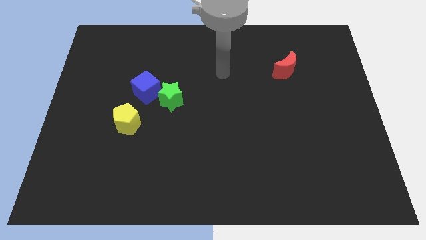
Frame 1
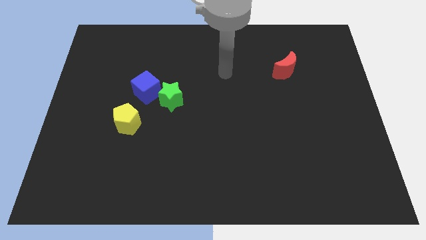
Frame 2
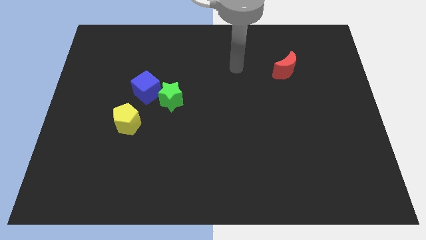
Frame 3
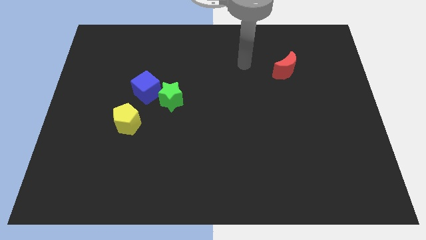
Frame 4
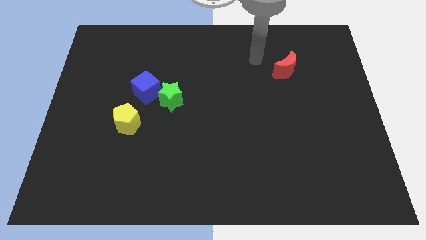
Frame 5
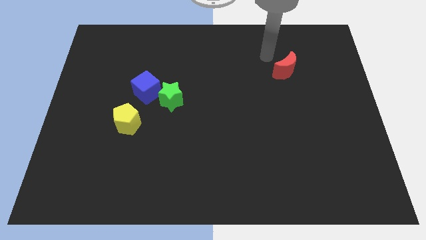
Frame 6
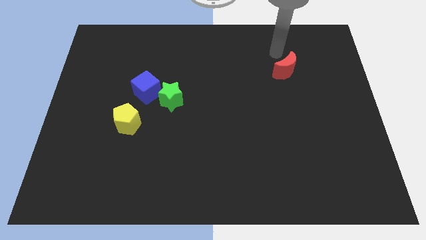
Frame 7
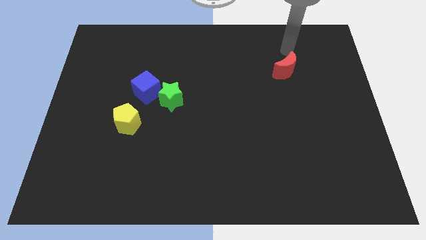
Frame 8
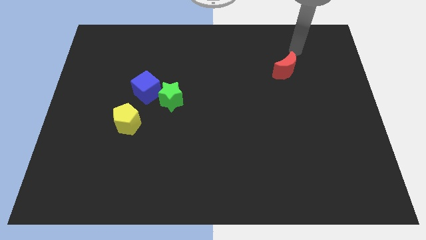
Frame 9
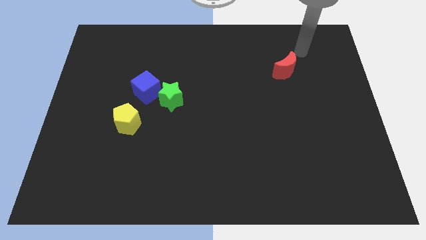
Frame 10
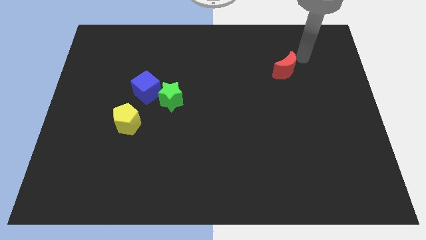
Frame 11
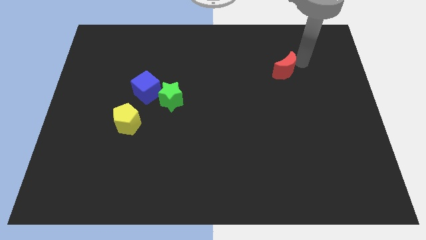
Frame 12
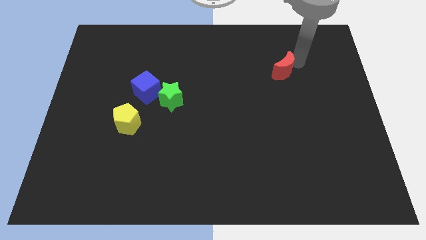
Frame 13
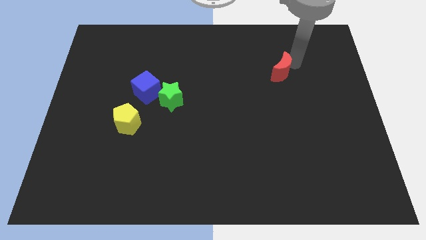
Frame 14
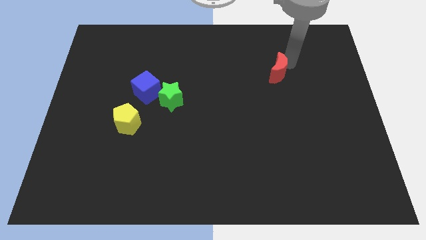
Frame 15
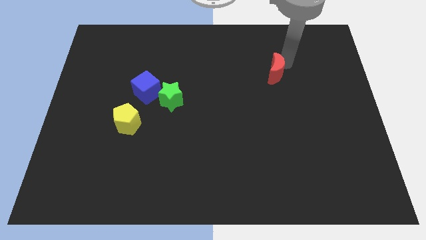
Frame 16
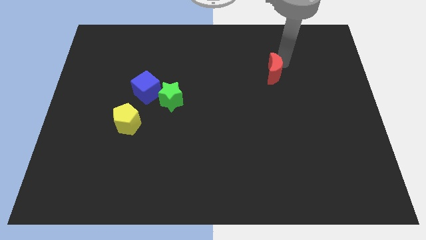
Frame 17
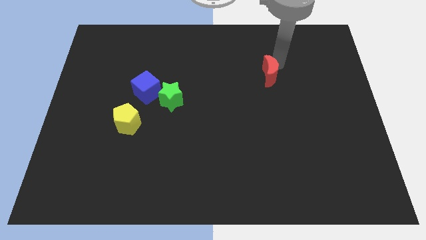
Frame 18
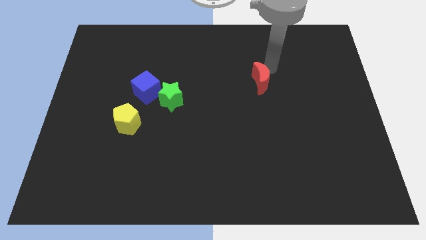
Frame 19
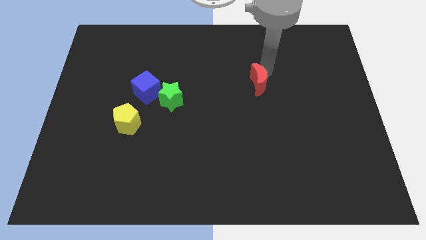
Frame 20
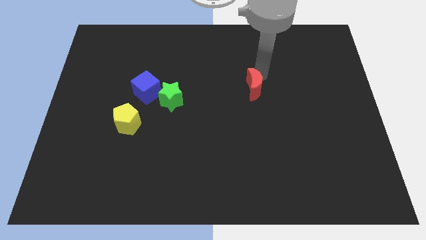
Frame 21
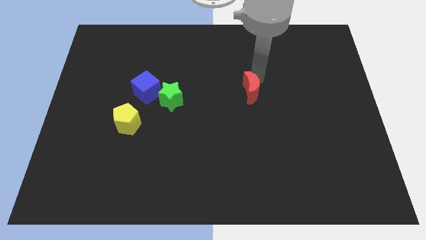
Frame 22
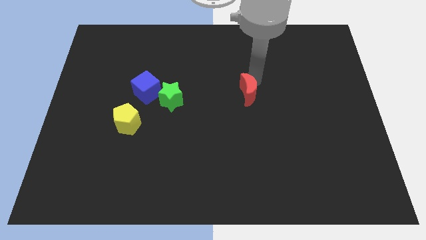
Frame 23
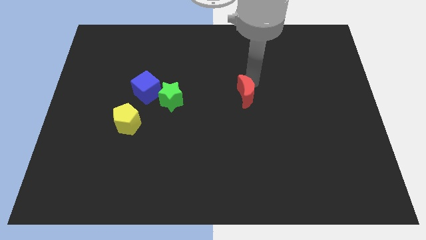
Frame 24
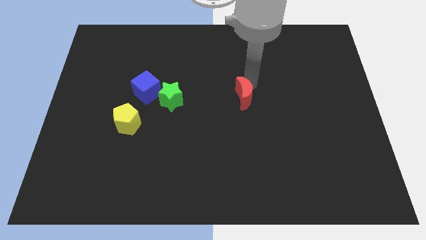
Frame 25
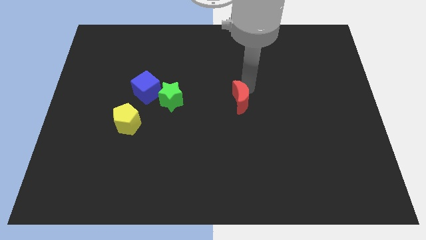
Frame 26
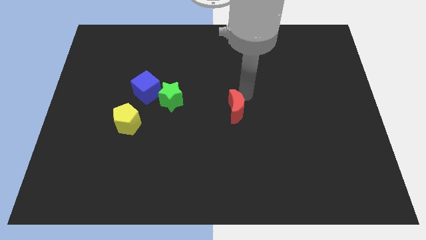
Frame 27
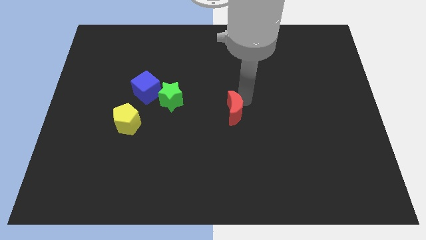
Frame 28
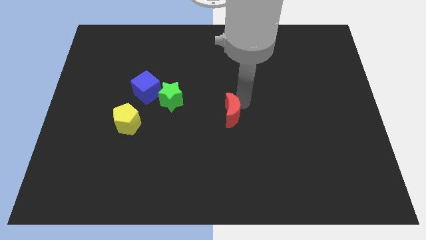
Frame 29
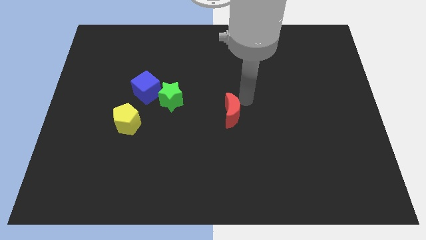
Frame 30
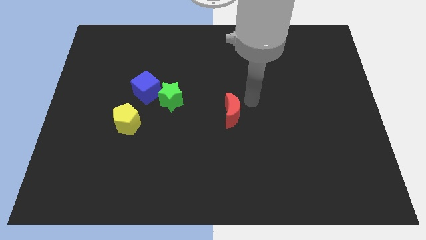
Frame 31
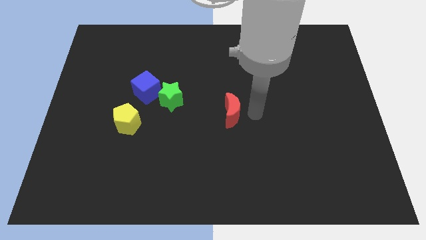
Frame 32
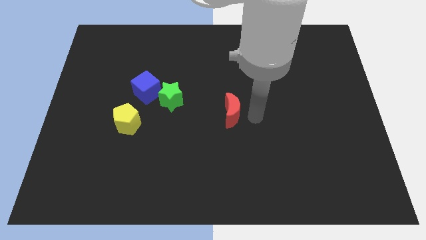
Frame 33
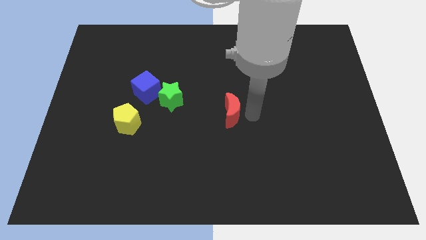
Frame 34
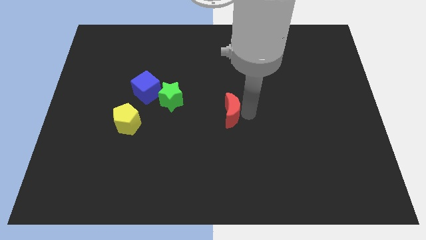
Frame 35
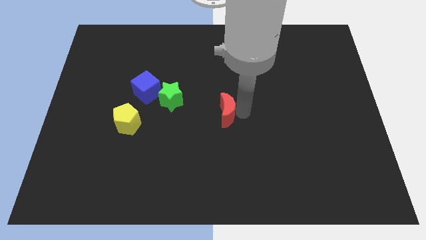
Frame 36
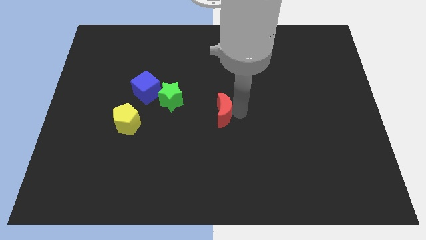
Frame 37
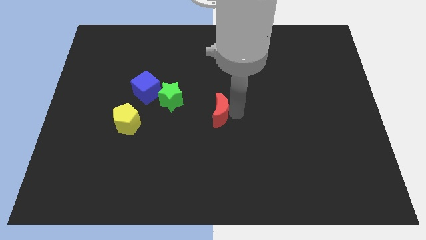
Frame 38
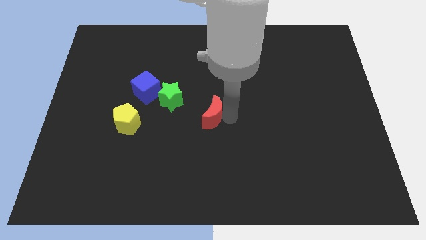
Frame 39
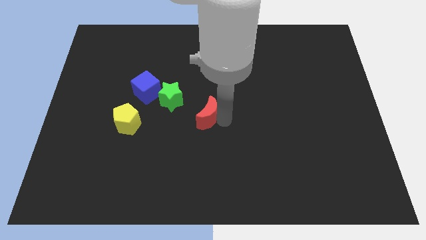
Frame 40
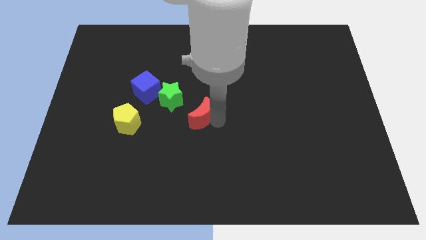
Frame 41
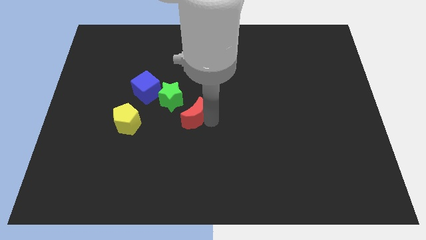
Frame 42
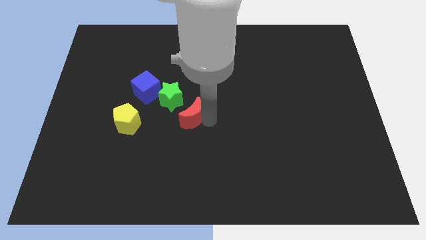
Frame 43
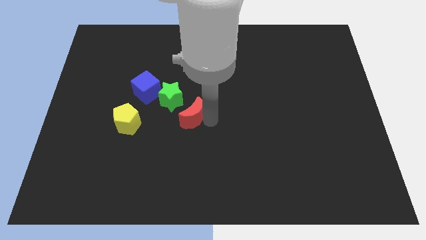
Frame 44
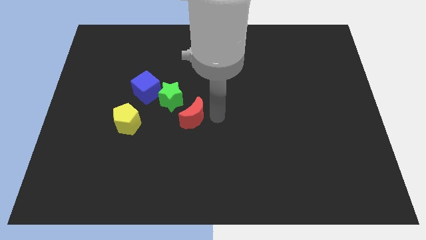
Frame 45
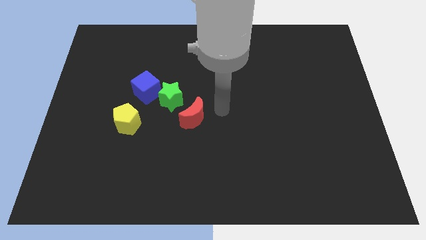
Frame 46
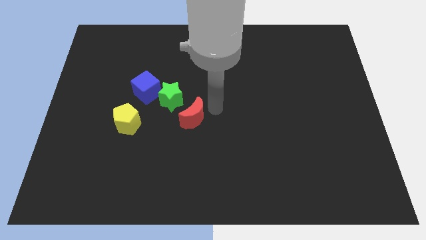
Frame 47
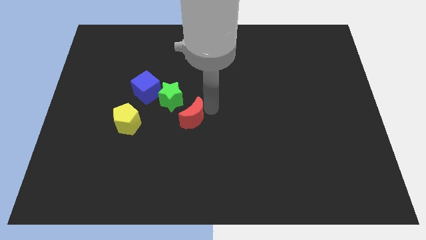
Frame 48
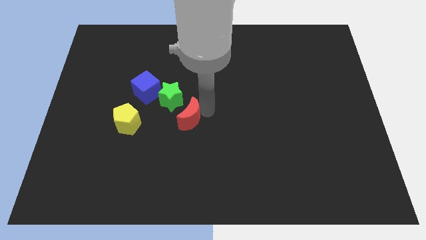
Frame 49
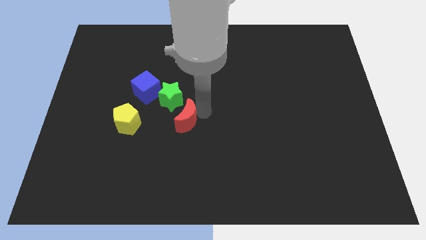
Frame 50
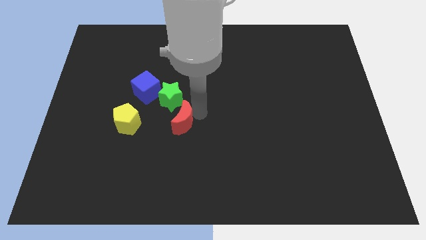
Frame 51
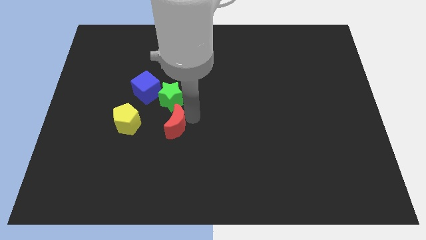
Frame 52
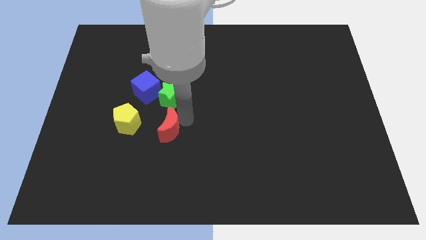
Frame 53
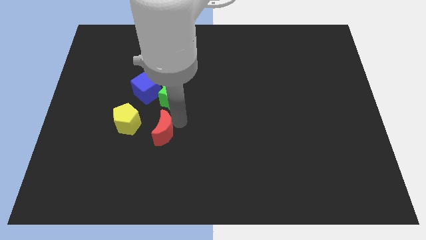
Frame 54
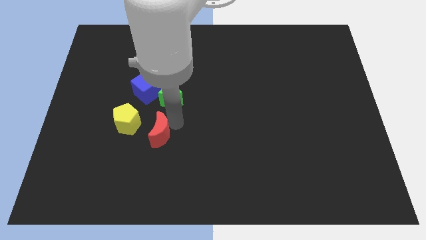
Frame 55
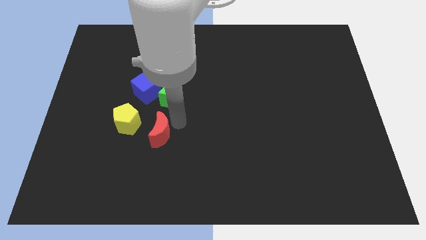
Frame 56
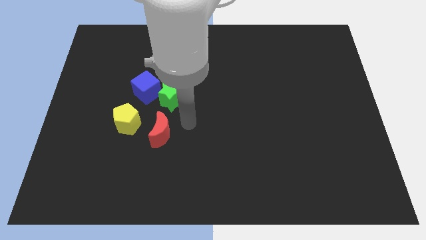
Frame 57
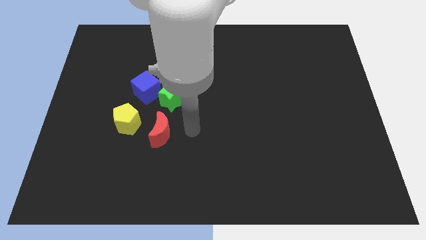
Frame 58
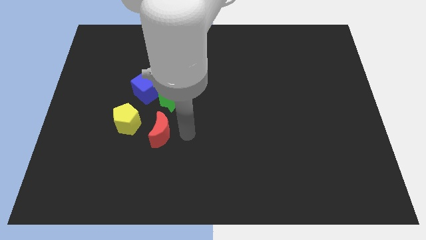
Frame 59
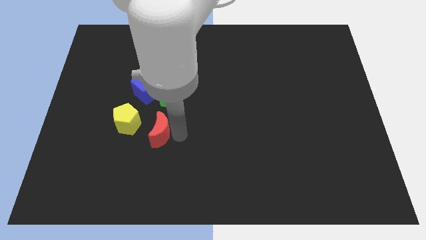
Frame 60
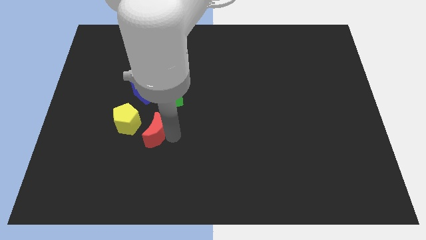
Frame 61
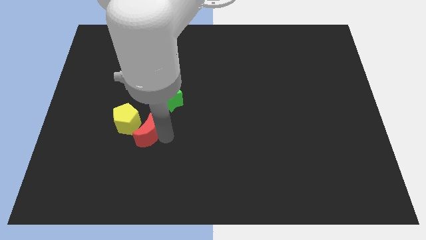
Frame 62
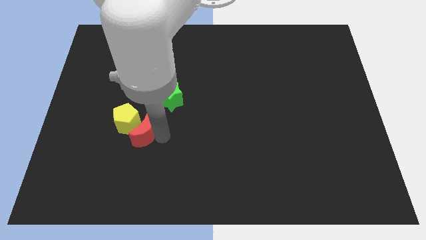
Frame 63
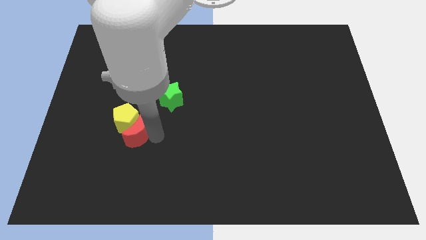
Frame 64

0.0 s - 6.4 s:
slide the moon towards the yellow pentagon

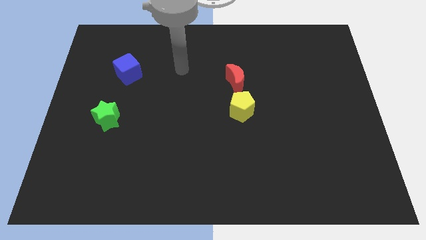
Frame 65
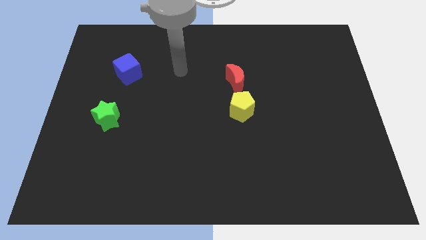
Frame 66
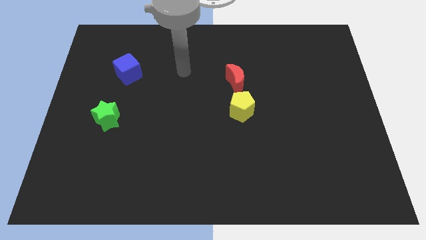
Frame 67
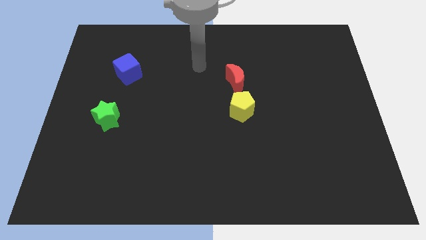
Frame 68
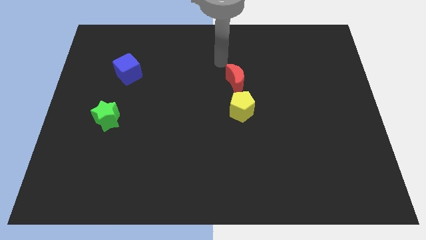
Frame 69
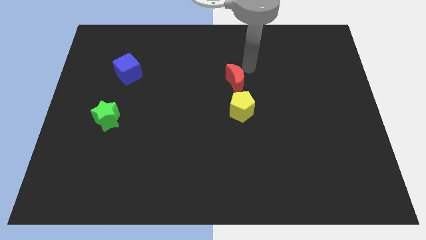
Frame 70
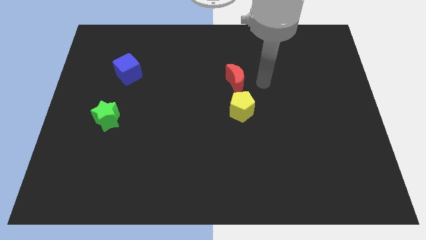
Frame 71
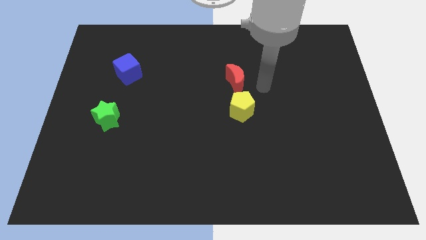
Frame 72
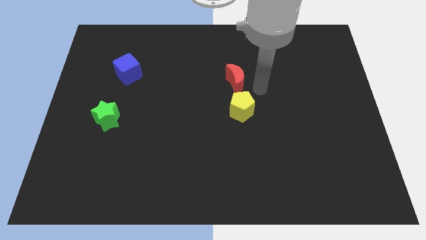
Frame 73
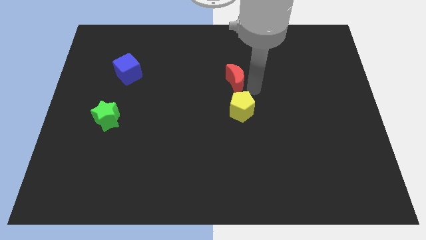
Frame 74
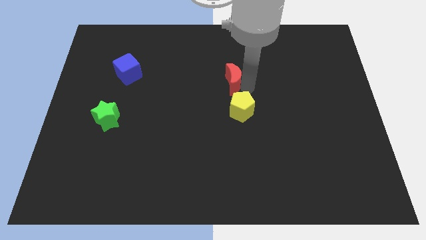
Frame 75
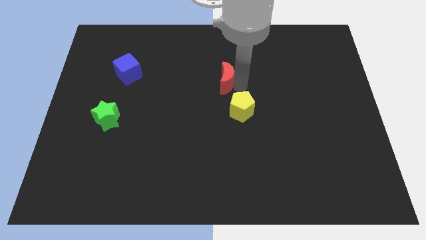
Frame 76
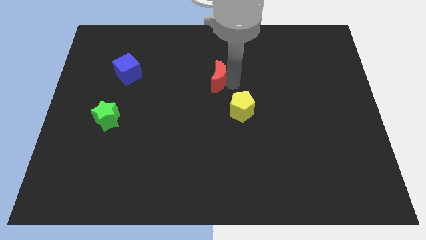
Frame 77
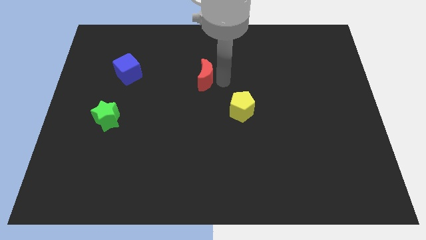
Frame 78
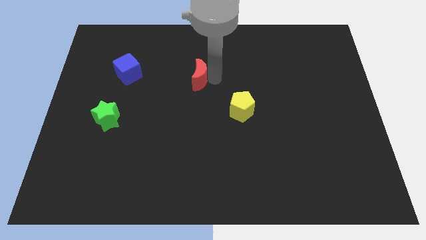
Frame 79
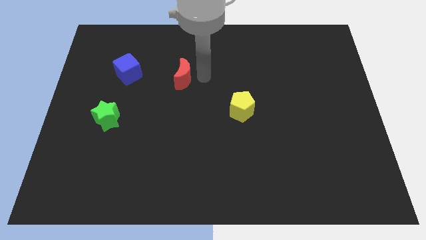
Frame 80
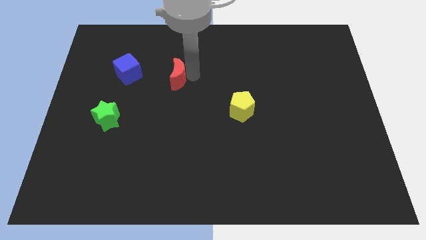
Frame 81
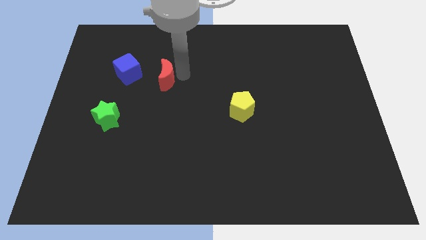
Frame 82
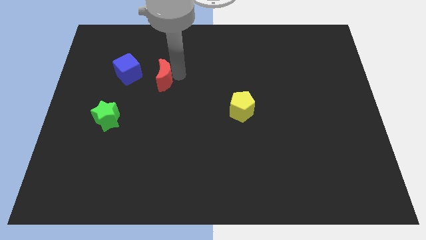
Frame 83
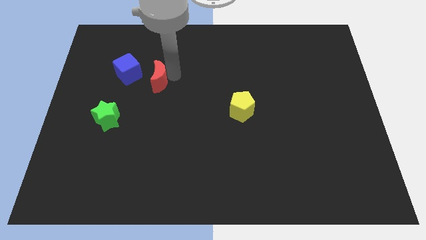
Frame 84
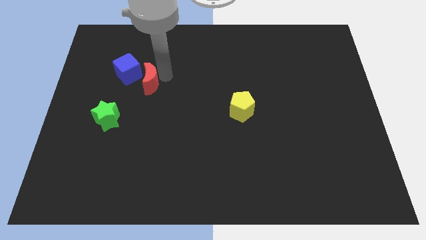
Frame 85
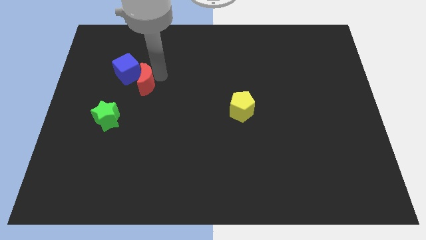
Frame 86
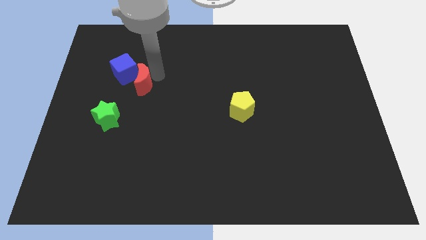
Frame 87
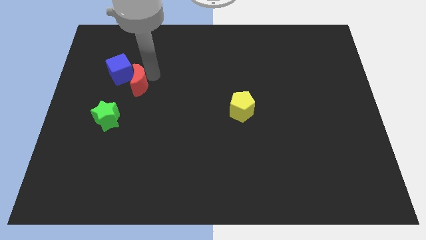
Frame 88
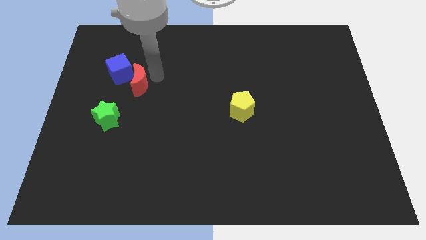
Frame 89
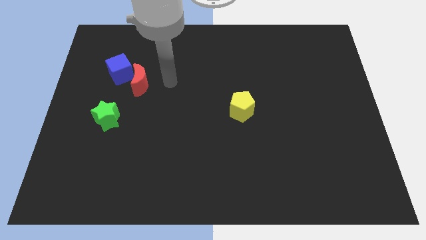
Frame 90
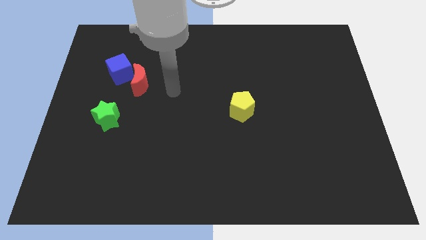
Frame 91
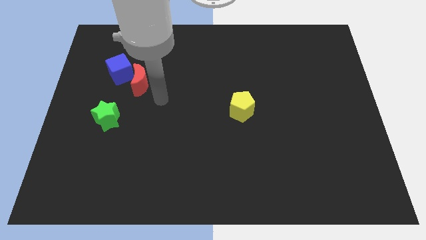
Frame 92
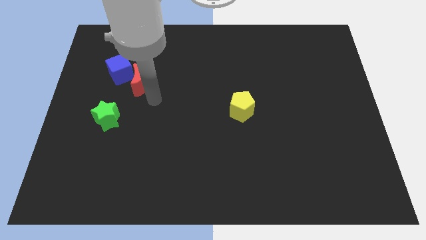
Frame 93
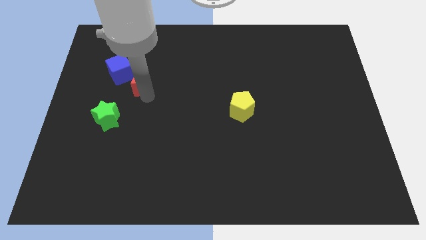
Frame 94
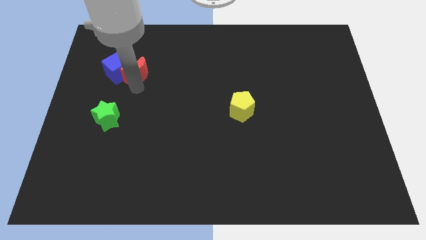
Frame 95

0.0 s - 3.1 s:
push the moon to the cube
